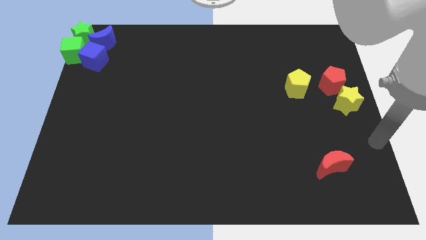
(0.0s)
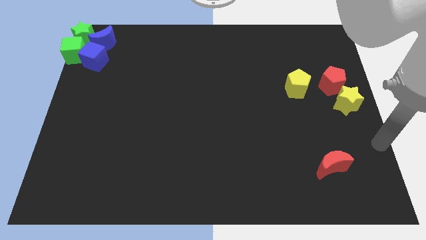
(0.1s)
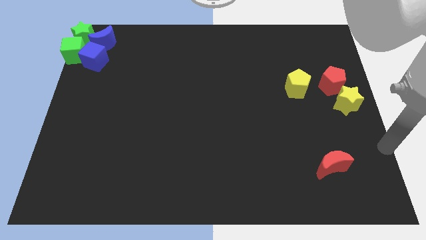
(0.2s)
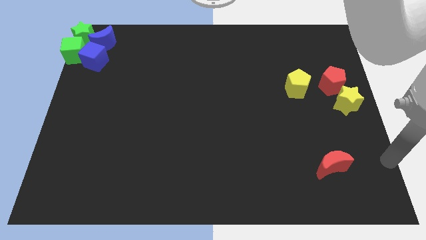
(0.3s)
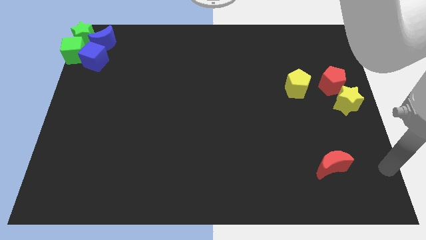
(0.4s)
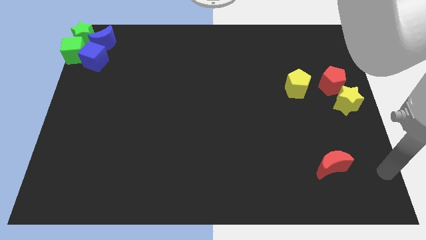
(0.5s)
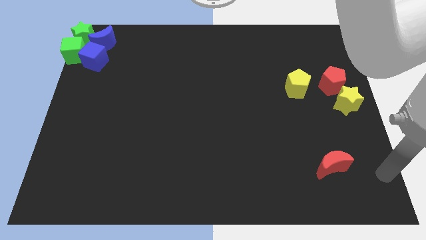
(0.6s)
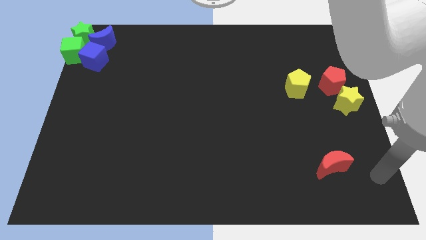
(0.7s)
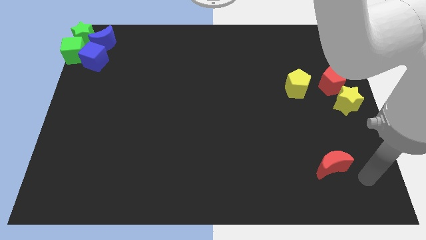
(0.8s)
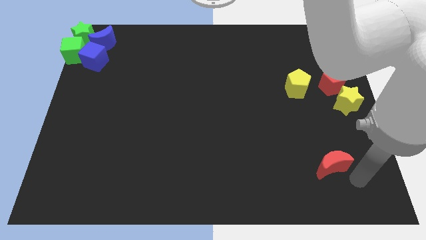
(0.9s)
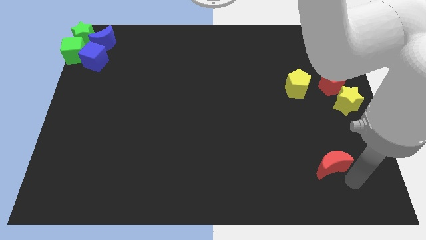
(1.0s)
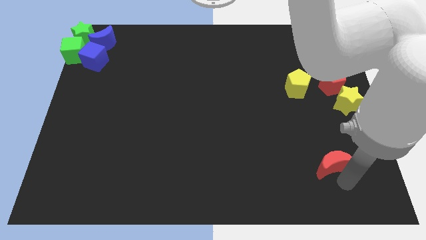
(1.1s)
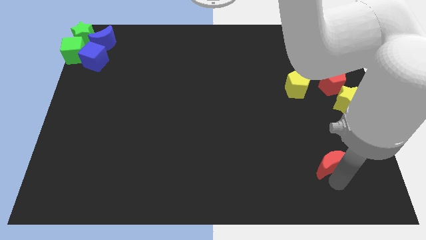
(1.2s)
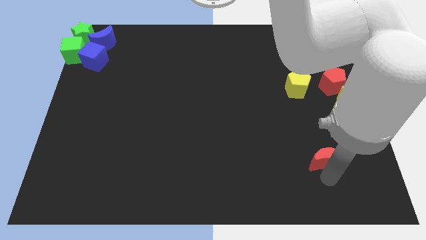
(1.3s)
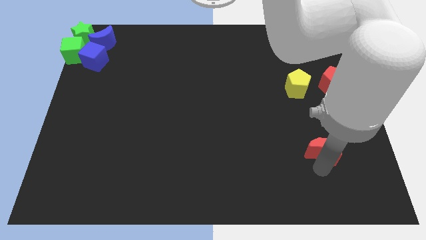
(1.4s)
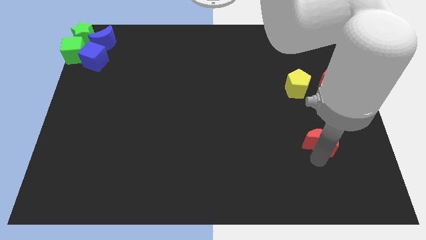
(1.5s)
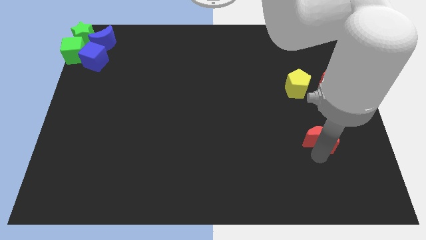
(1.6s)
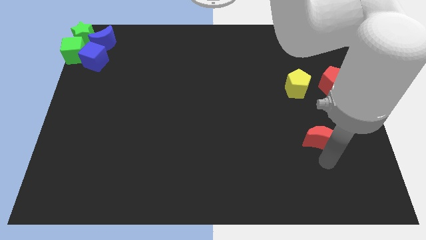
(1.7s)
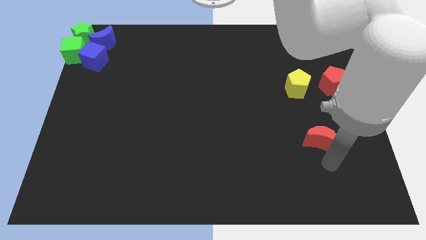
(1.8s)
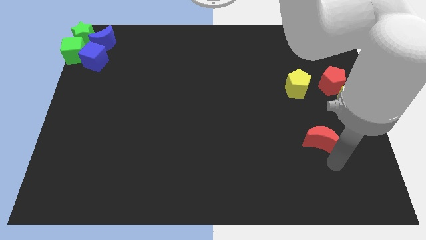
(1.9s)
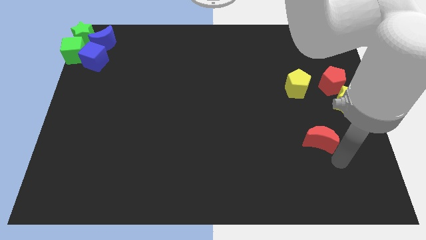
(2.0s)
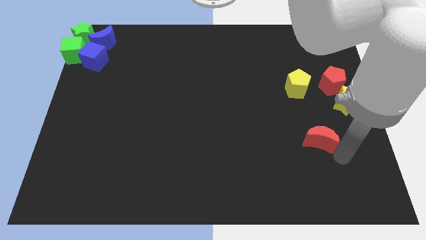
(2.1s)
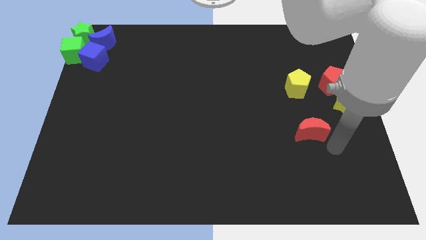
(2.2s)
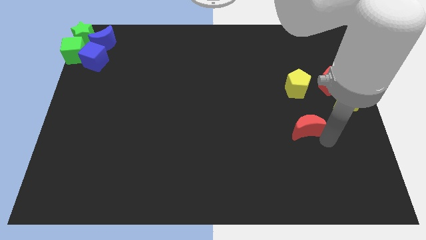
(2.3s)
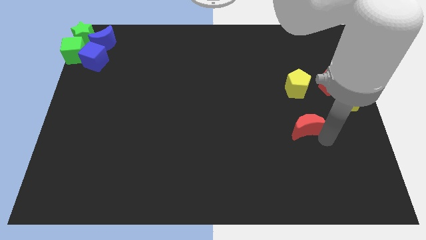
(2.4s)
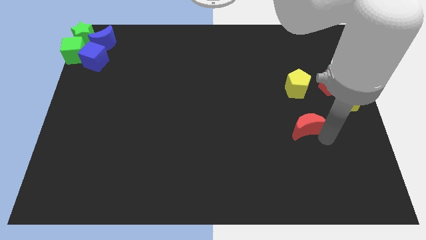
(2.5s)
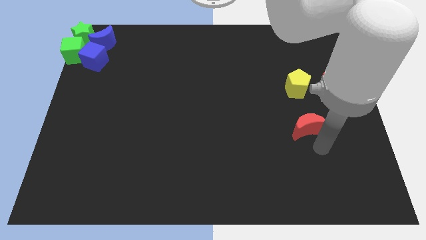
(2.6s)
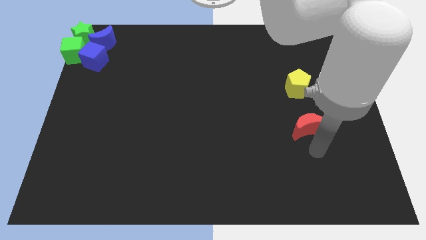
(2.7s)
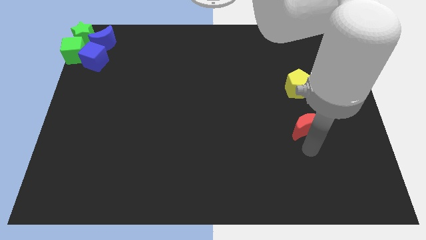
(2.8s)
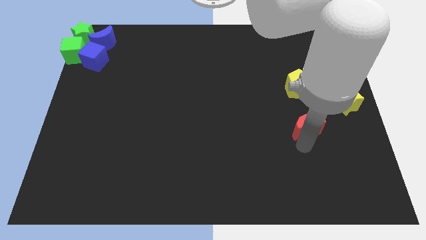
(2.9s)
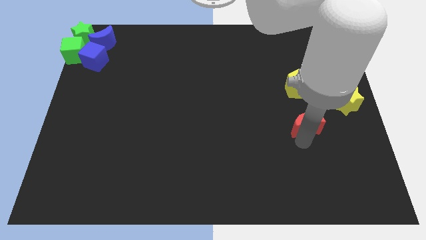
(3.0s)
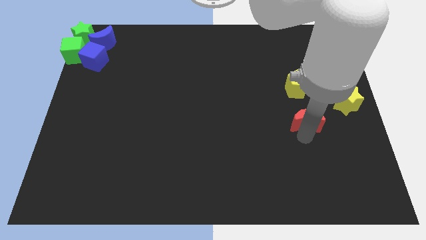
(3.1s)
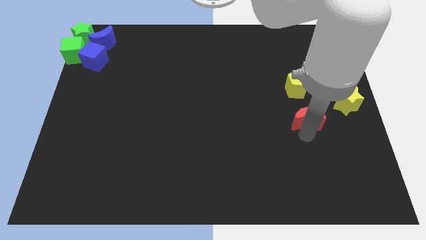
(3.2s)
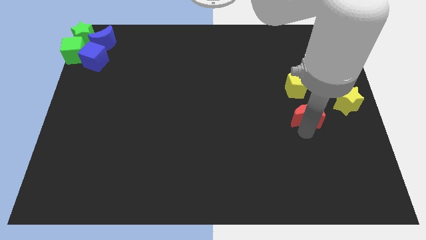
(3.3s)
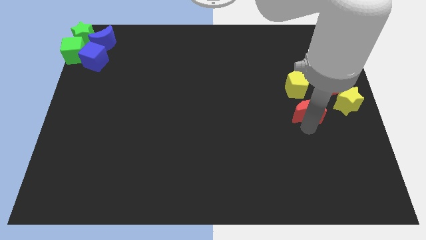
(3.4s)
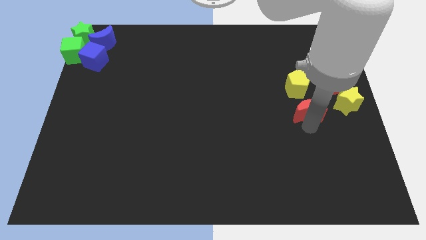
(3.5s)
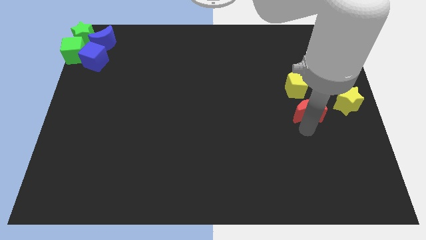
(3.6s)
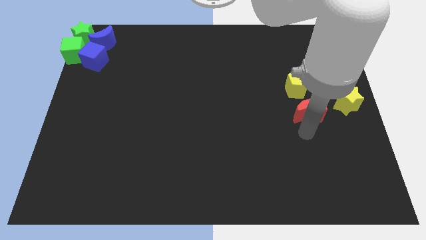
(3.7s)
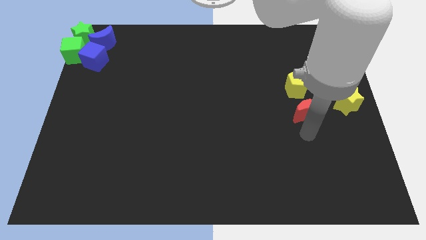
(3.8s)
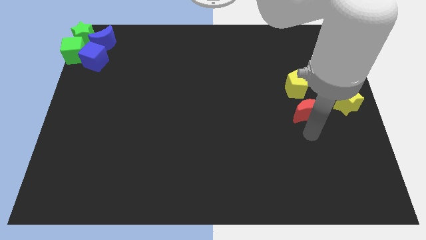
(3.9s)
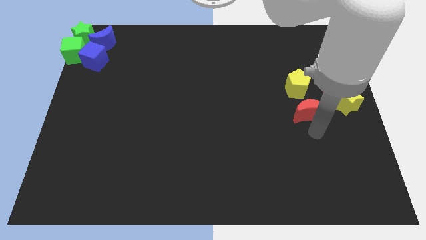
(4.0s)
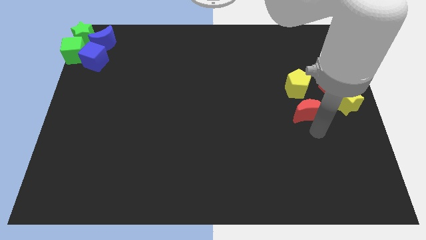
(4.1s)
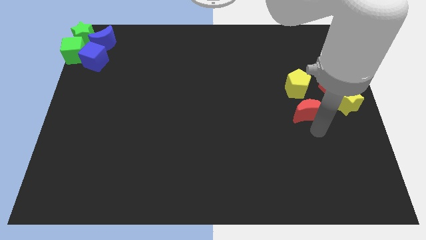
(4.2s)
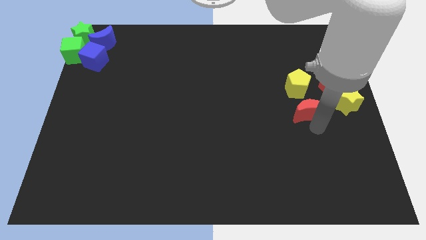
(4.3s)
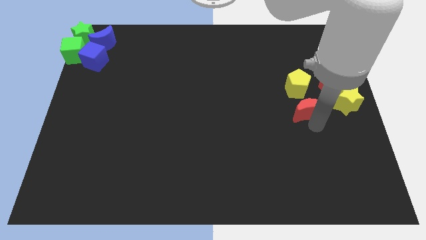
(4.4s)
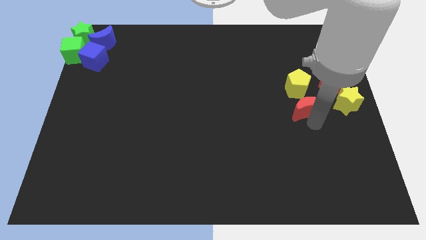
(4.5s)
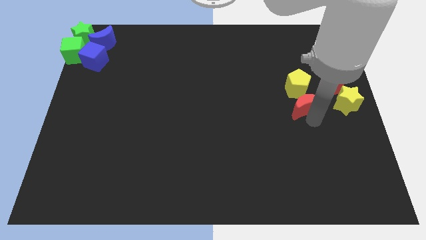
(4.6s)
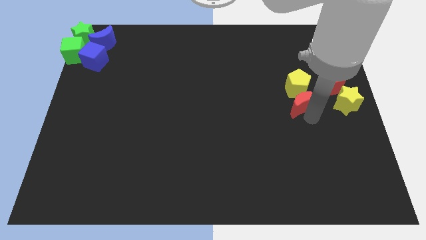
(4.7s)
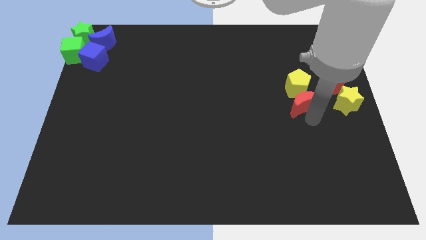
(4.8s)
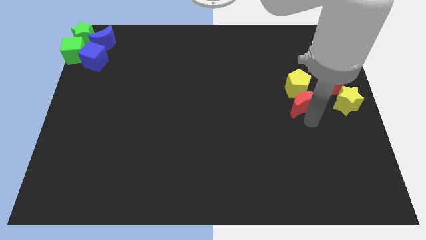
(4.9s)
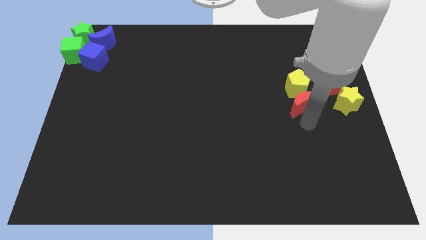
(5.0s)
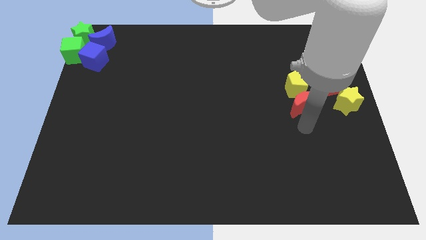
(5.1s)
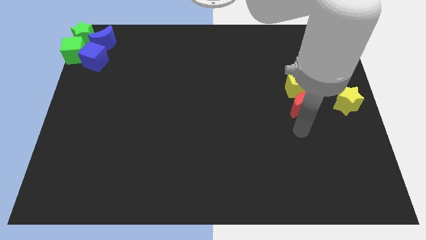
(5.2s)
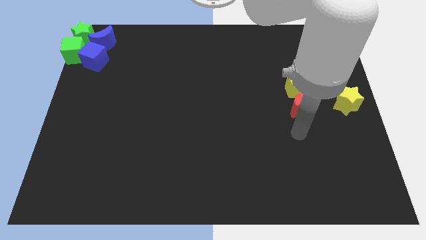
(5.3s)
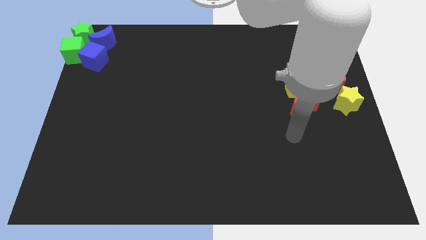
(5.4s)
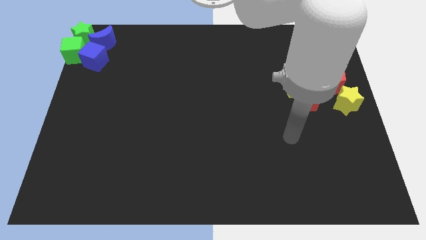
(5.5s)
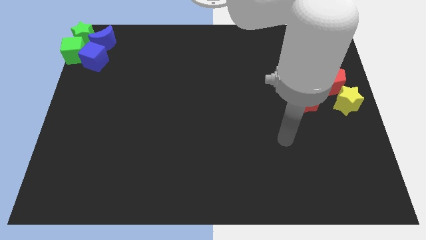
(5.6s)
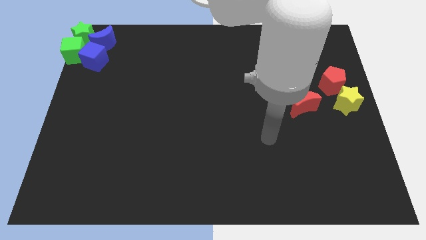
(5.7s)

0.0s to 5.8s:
push the red crescent to the left of the yellow star

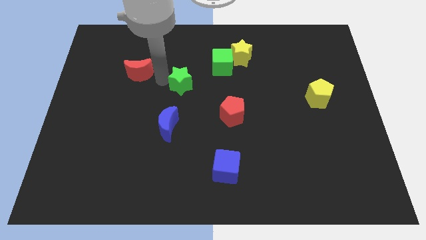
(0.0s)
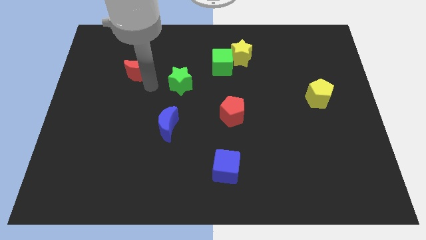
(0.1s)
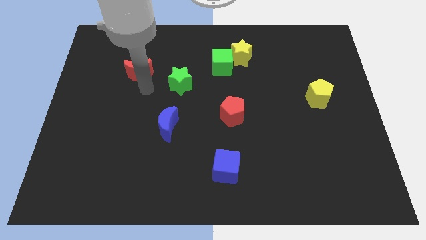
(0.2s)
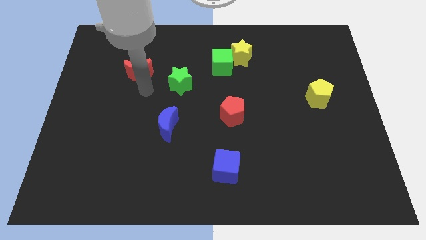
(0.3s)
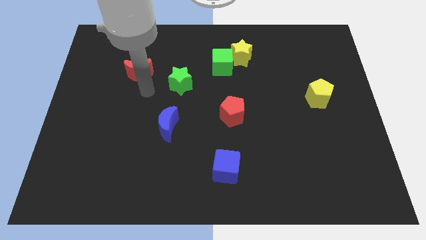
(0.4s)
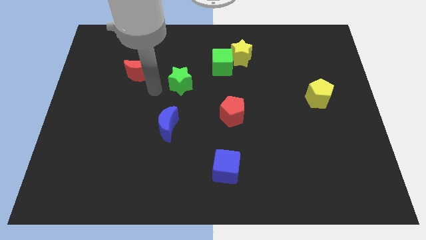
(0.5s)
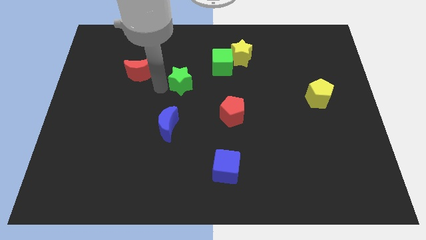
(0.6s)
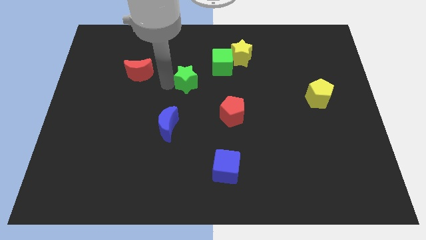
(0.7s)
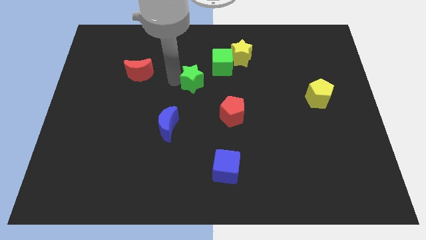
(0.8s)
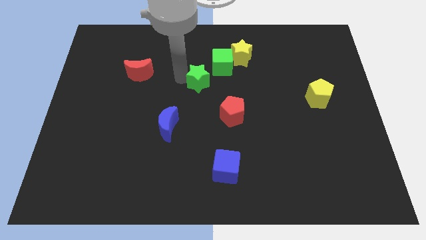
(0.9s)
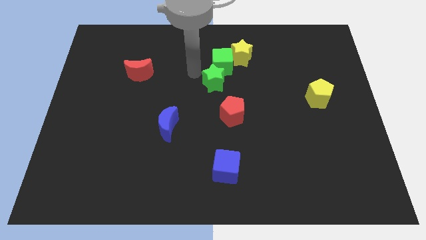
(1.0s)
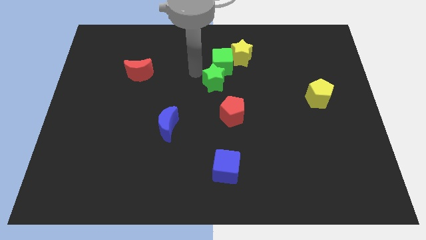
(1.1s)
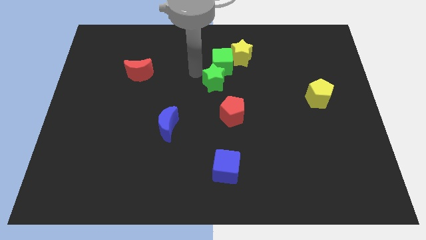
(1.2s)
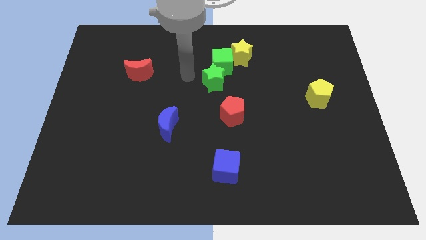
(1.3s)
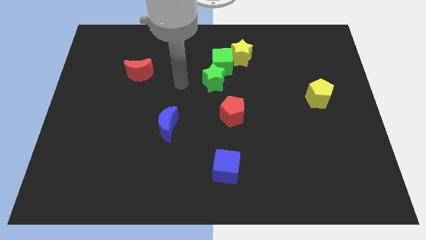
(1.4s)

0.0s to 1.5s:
push the green star close to the green cube

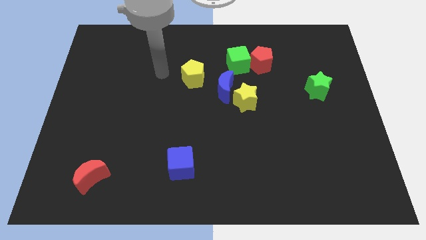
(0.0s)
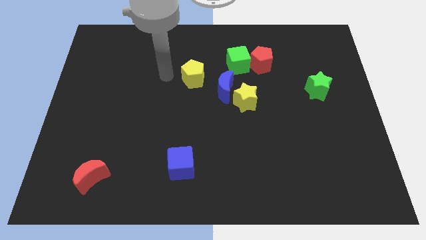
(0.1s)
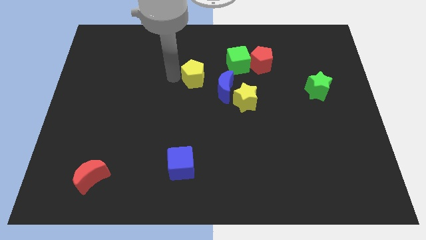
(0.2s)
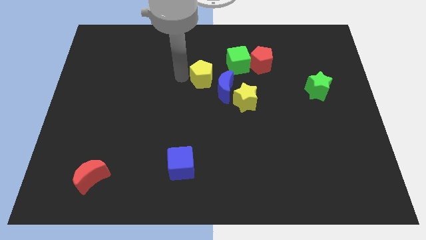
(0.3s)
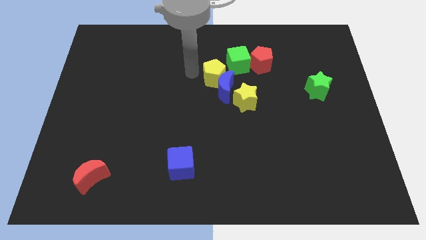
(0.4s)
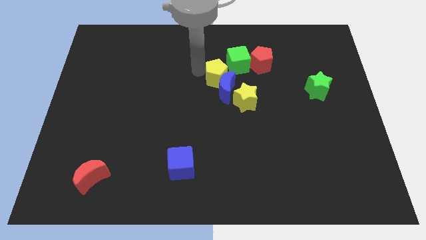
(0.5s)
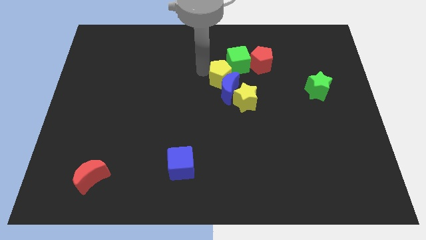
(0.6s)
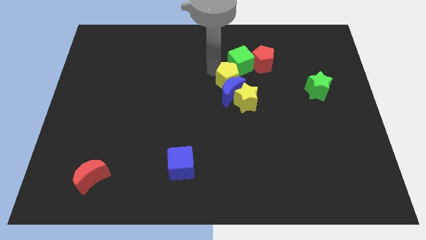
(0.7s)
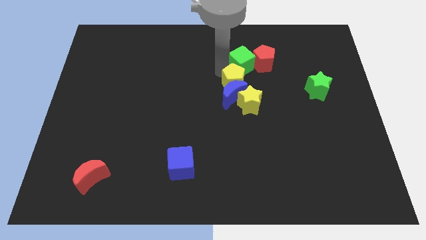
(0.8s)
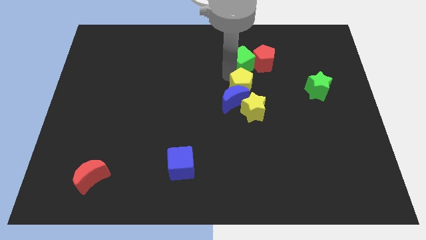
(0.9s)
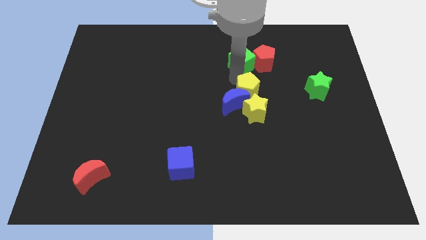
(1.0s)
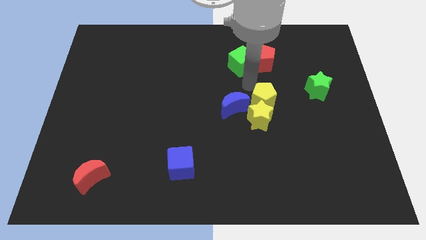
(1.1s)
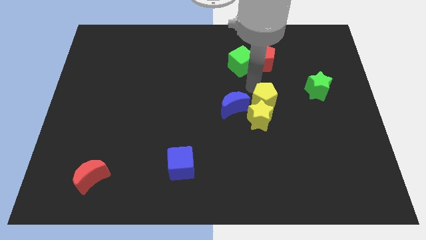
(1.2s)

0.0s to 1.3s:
place the yellow pentagon at the top side of the yellow star

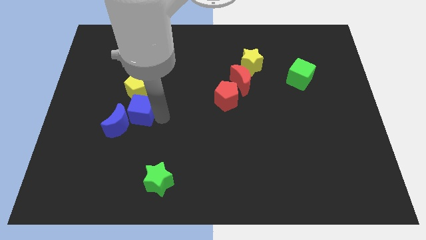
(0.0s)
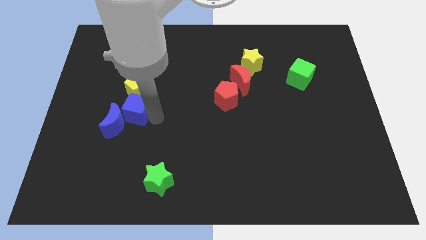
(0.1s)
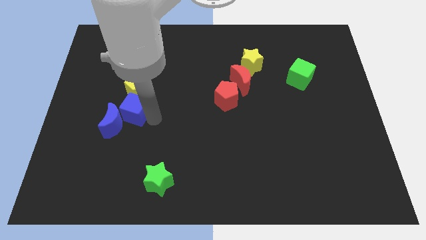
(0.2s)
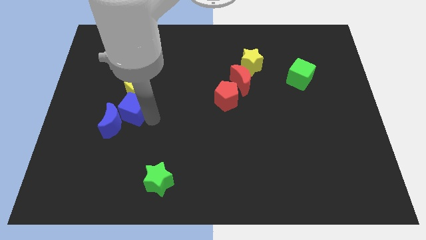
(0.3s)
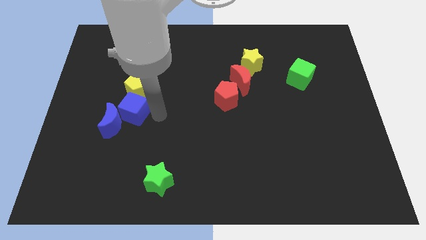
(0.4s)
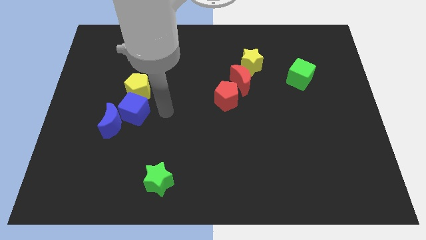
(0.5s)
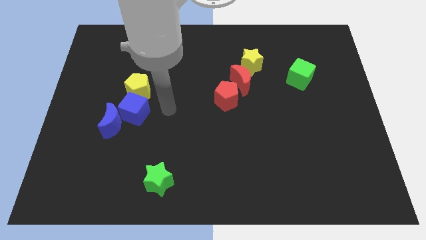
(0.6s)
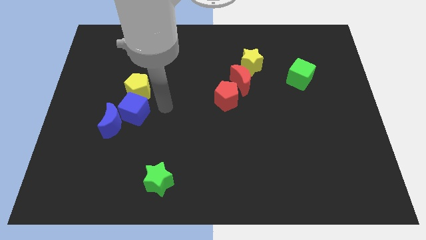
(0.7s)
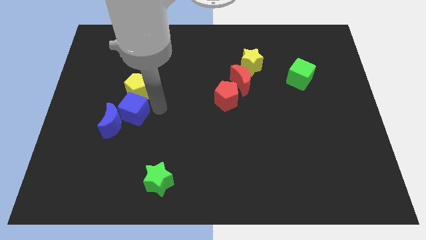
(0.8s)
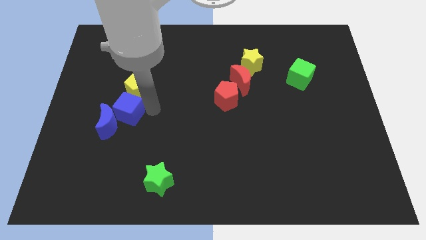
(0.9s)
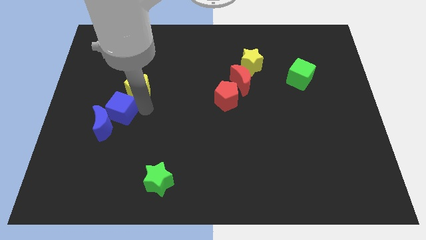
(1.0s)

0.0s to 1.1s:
place blue cube in between blue moon and yellow pentagon
